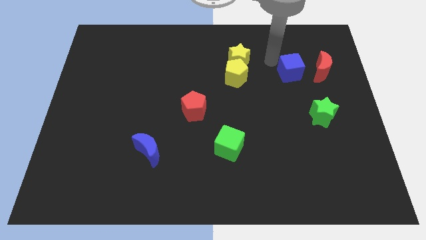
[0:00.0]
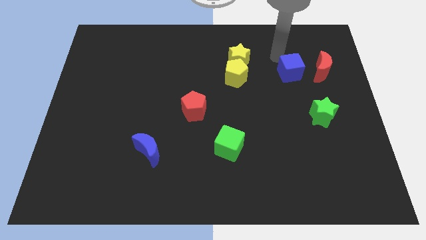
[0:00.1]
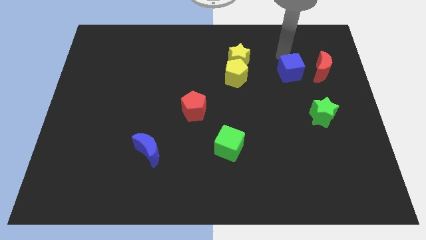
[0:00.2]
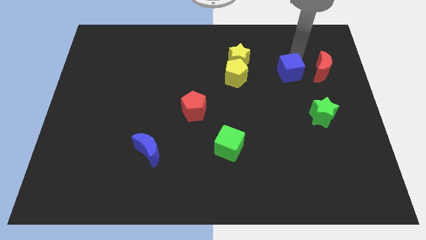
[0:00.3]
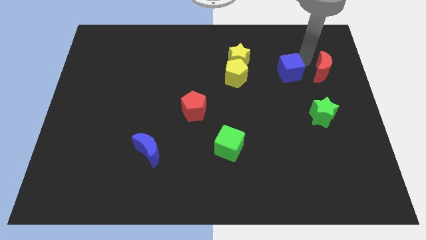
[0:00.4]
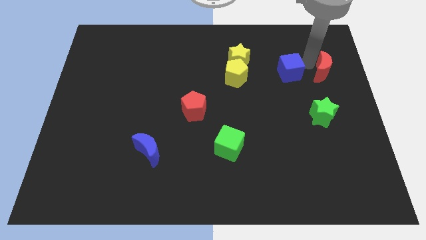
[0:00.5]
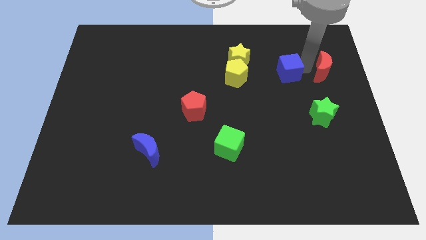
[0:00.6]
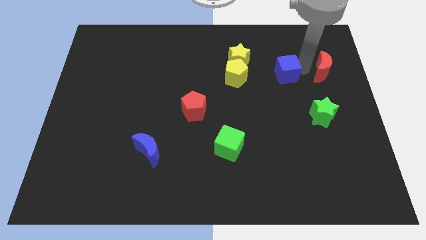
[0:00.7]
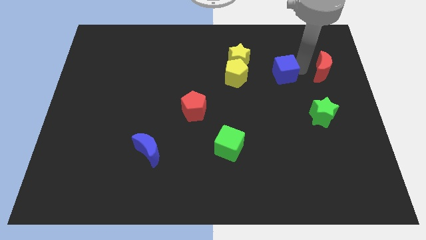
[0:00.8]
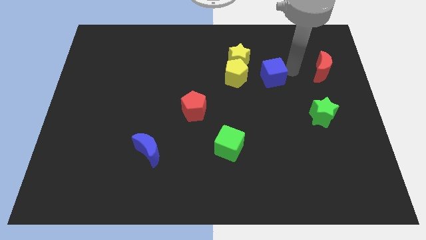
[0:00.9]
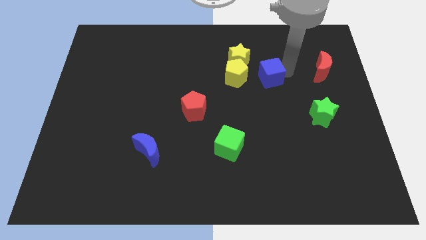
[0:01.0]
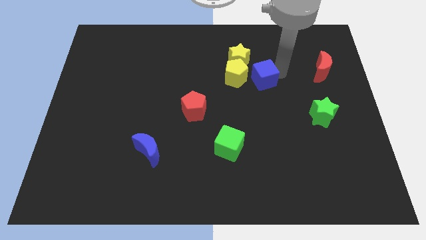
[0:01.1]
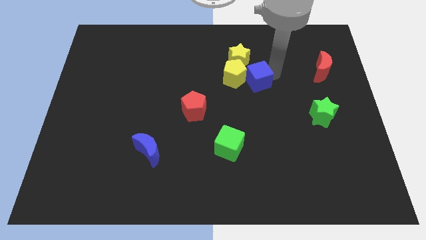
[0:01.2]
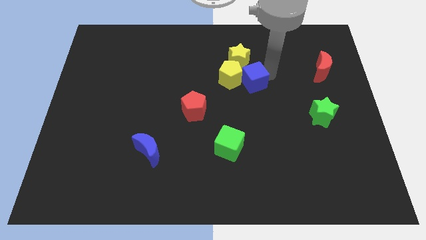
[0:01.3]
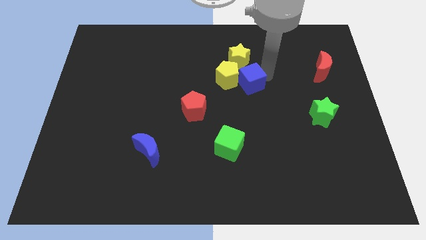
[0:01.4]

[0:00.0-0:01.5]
push blue cube into the yellow pentagon

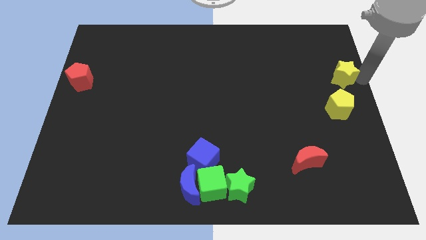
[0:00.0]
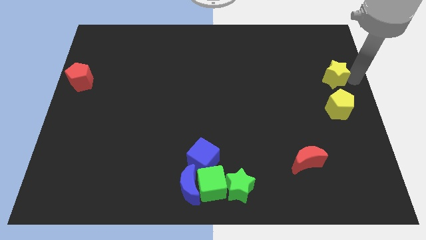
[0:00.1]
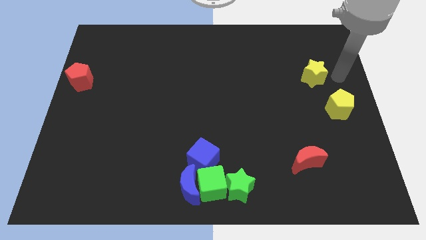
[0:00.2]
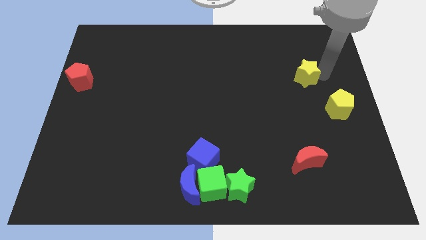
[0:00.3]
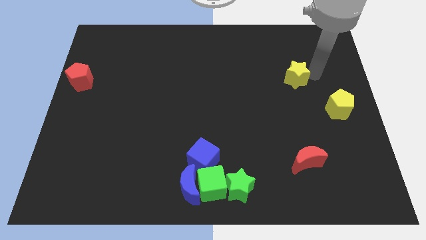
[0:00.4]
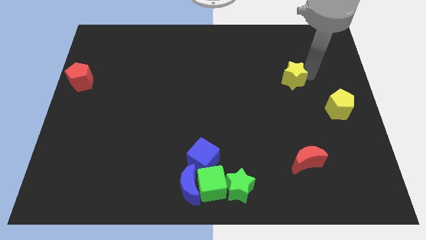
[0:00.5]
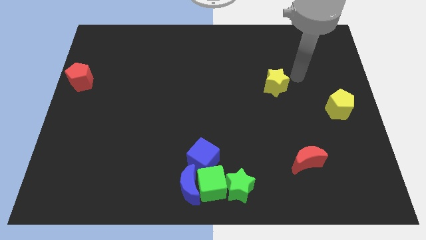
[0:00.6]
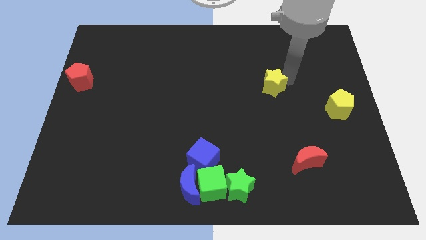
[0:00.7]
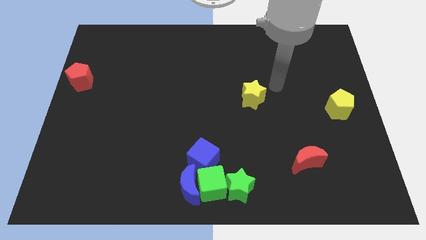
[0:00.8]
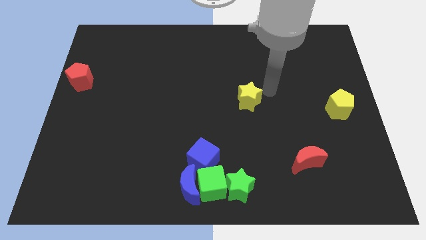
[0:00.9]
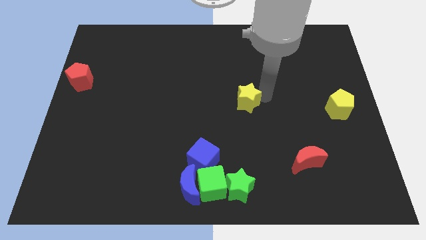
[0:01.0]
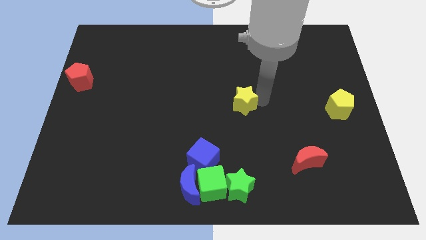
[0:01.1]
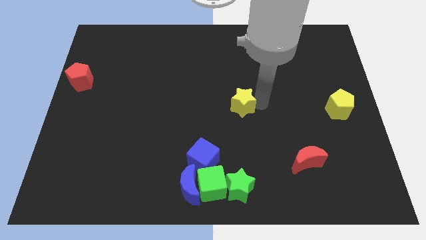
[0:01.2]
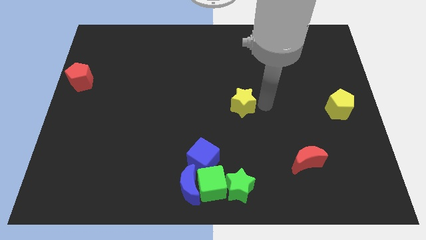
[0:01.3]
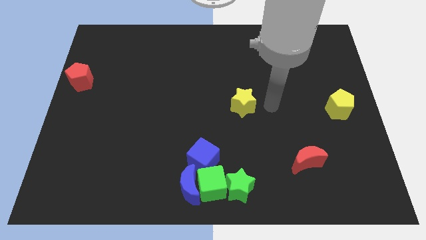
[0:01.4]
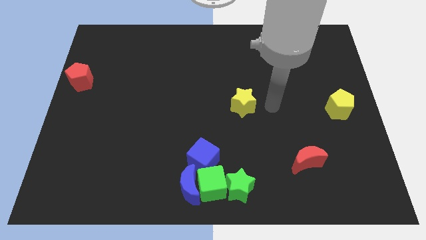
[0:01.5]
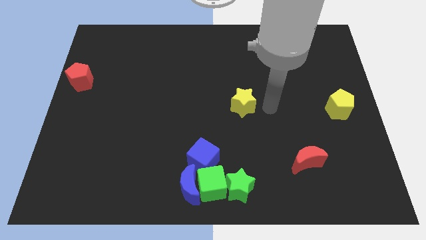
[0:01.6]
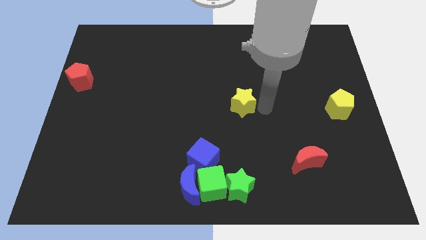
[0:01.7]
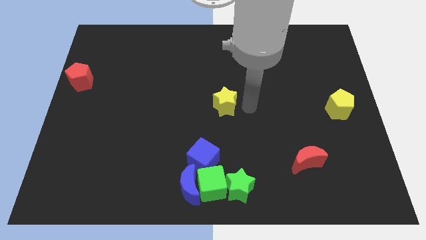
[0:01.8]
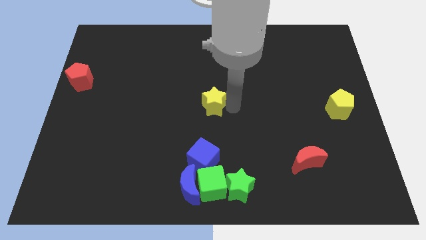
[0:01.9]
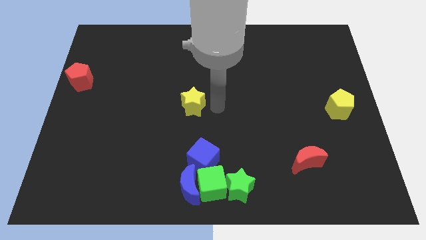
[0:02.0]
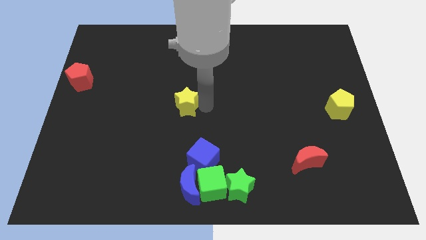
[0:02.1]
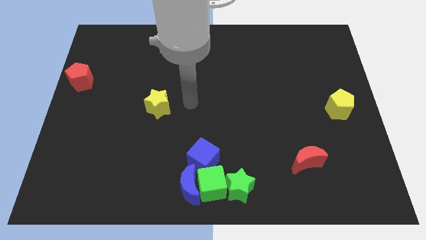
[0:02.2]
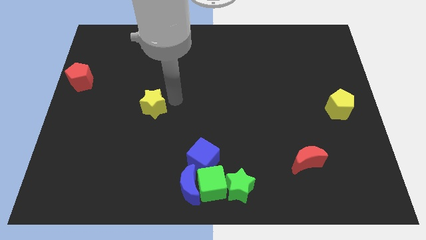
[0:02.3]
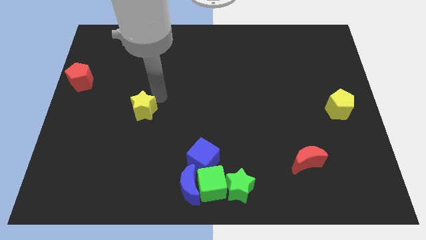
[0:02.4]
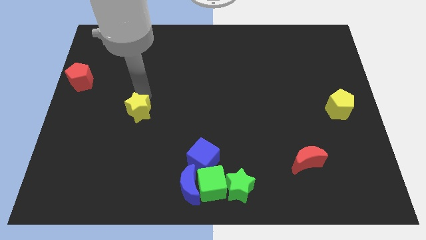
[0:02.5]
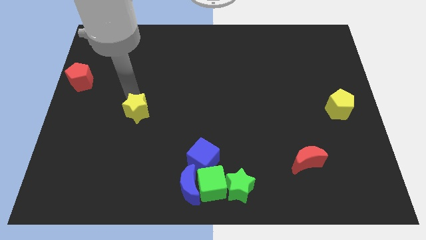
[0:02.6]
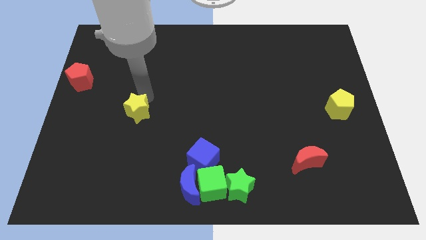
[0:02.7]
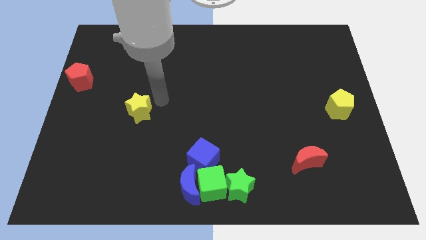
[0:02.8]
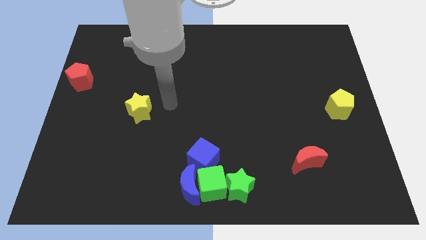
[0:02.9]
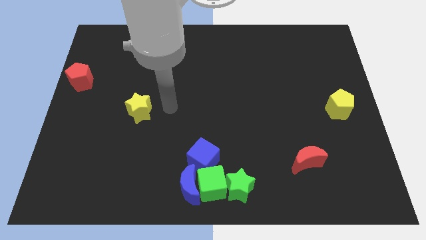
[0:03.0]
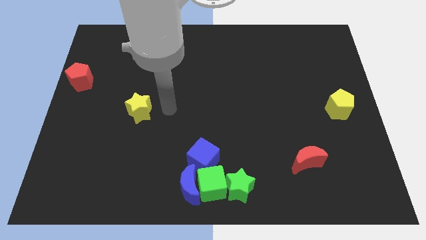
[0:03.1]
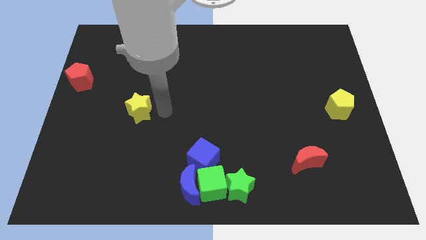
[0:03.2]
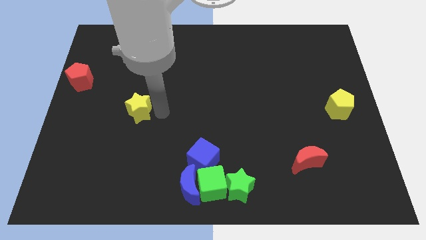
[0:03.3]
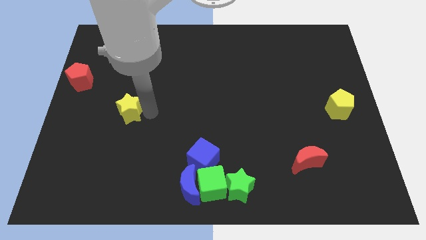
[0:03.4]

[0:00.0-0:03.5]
slide the yellow star to the left side of the board

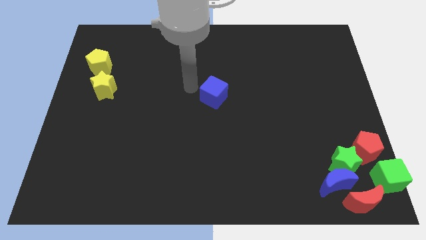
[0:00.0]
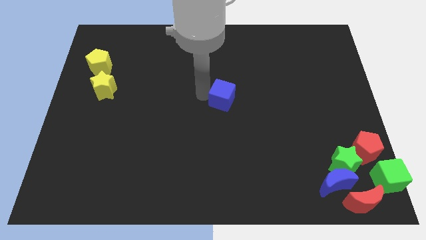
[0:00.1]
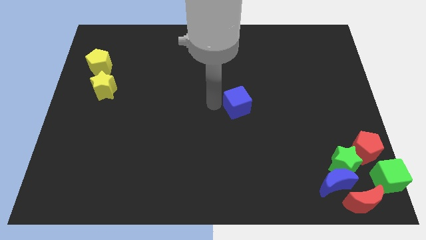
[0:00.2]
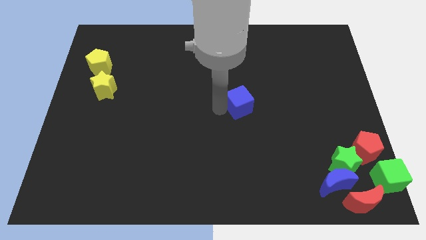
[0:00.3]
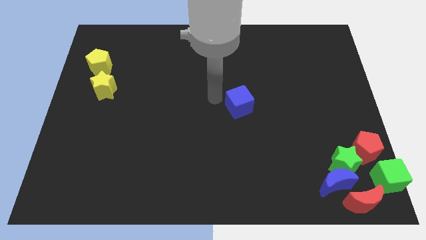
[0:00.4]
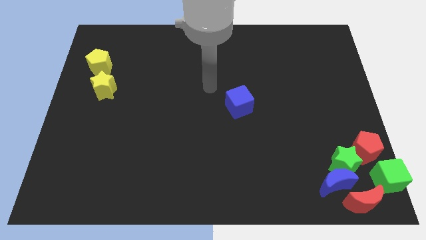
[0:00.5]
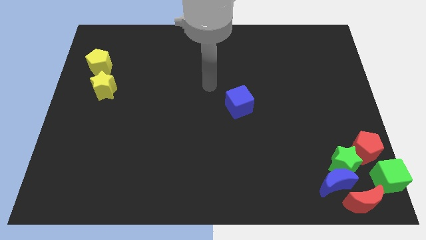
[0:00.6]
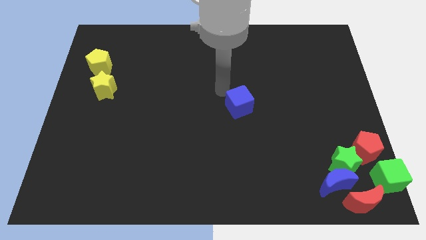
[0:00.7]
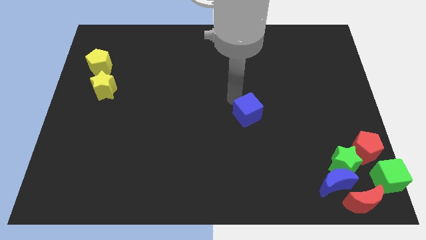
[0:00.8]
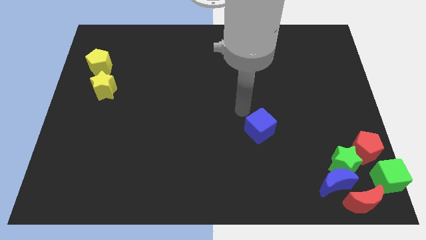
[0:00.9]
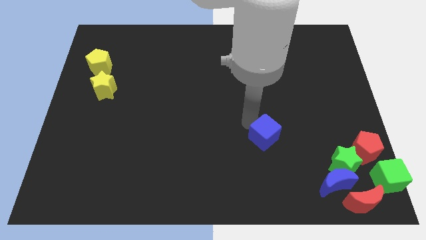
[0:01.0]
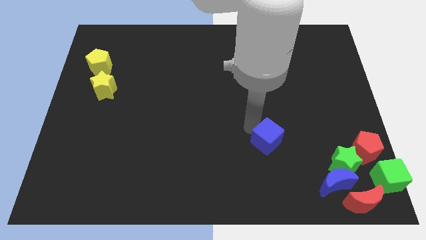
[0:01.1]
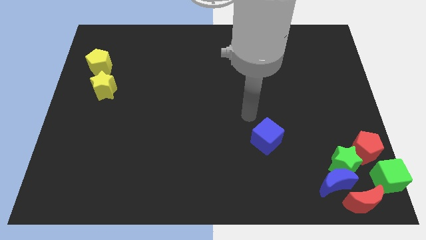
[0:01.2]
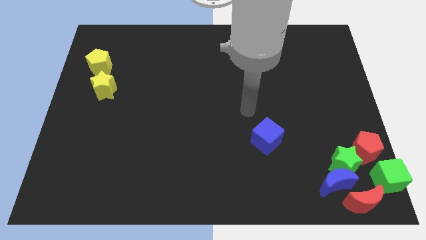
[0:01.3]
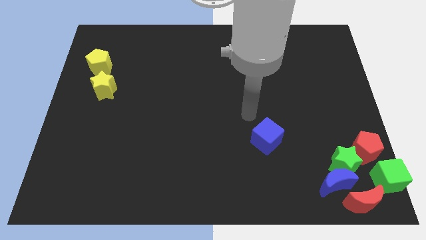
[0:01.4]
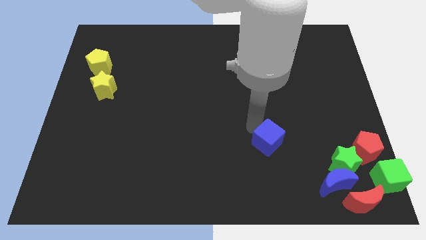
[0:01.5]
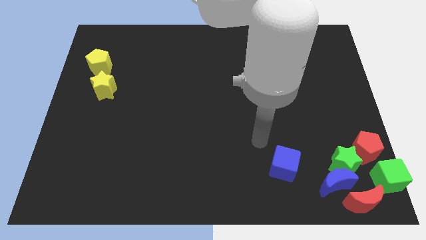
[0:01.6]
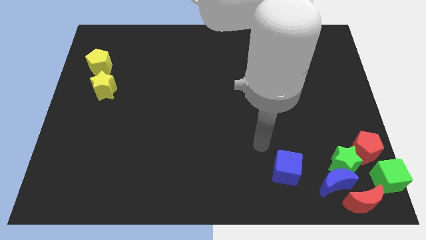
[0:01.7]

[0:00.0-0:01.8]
move the blue cube parallel to the green star

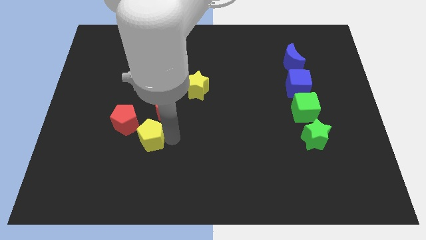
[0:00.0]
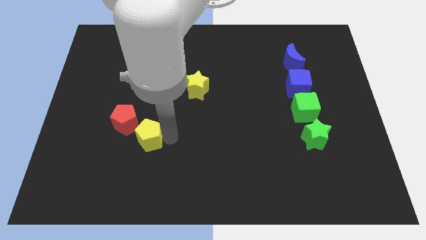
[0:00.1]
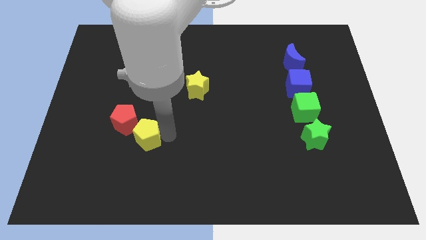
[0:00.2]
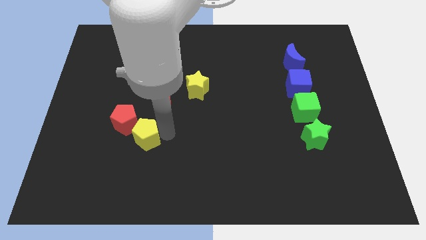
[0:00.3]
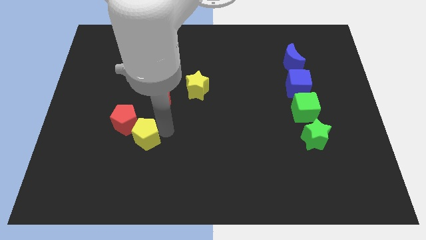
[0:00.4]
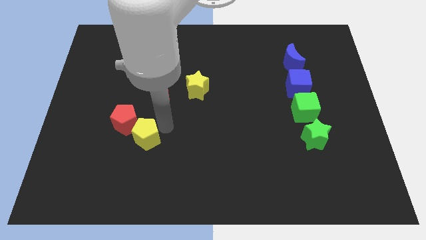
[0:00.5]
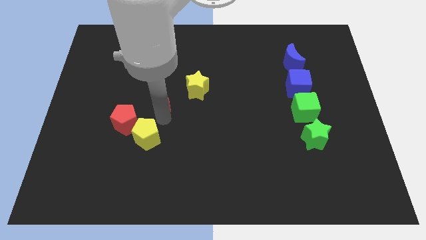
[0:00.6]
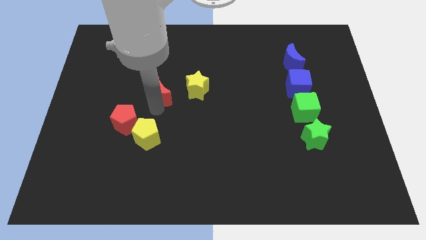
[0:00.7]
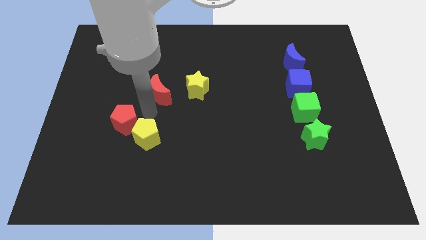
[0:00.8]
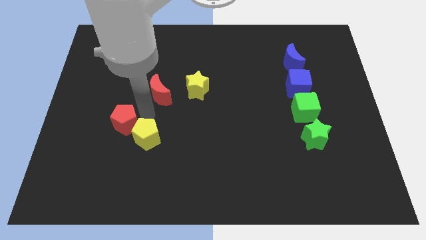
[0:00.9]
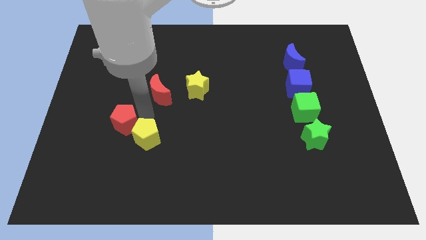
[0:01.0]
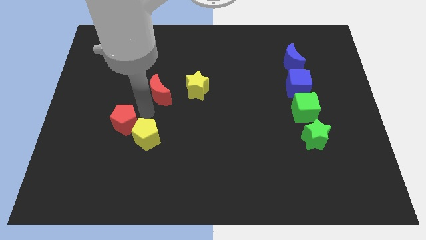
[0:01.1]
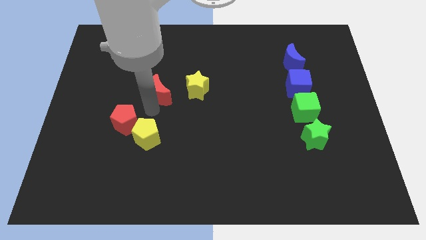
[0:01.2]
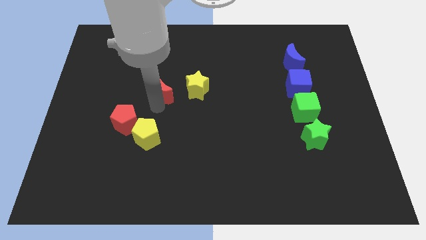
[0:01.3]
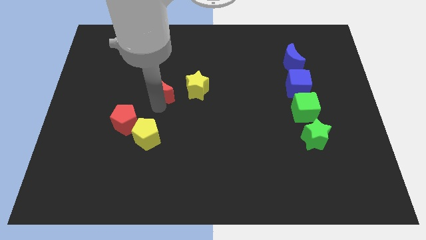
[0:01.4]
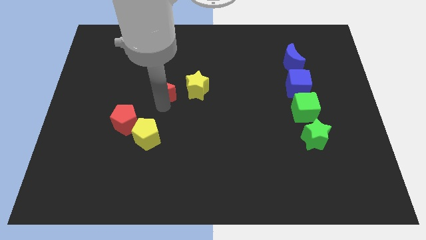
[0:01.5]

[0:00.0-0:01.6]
separate the yellow pentagon and the red crescent

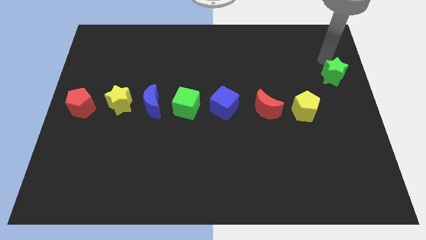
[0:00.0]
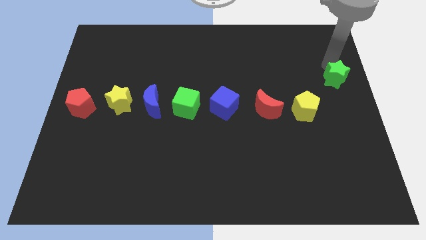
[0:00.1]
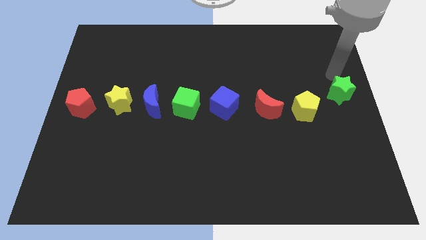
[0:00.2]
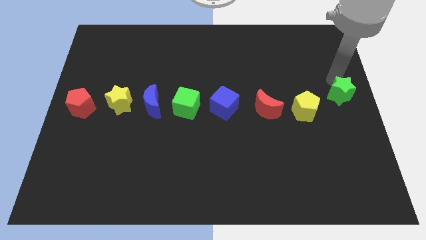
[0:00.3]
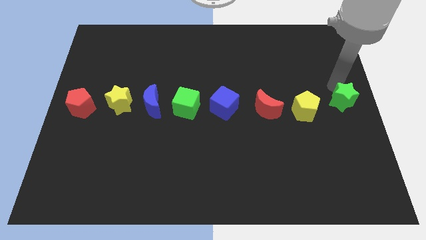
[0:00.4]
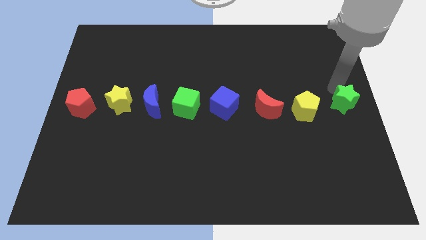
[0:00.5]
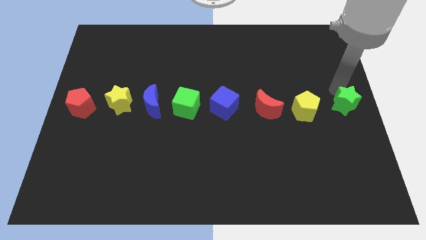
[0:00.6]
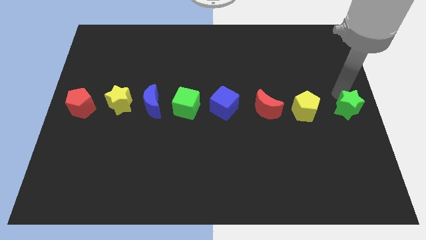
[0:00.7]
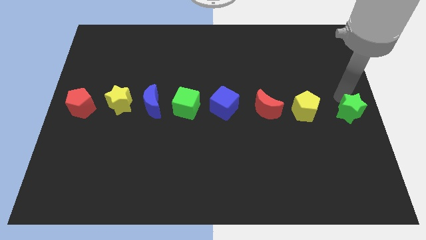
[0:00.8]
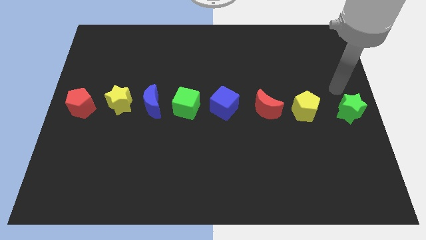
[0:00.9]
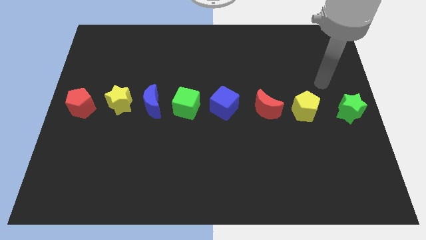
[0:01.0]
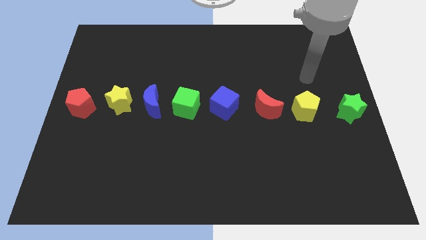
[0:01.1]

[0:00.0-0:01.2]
place green star to the right side of yellow pentagon
